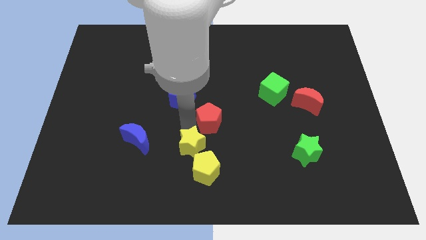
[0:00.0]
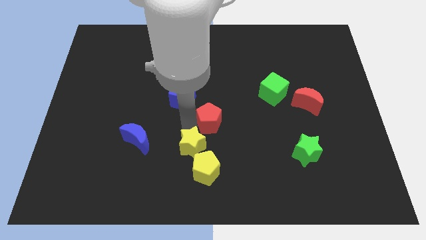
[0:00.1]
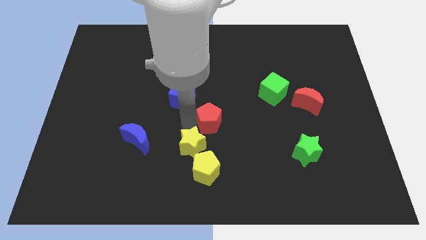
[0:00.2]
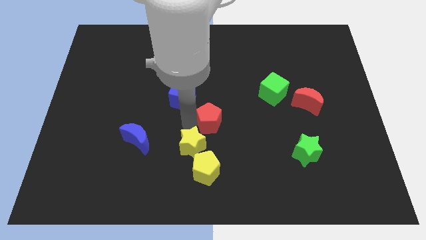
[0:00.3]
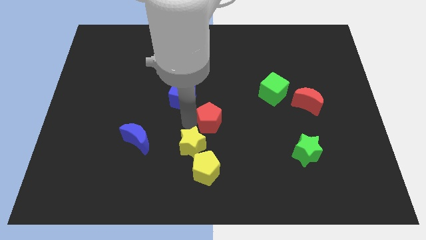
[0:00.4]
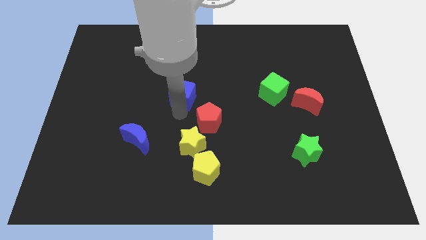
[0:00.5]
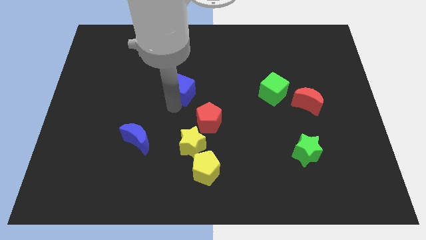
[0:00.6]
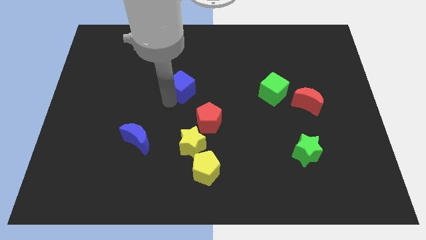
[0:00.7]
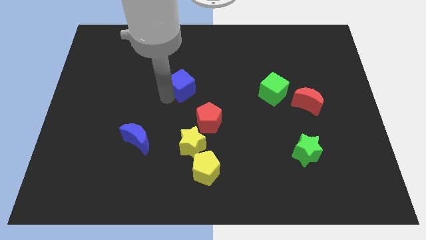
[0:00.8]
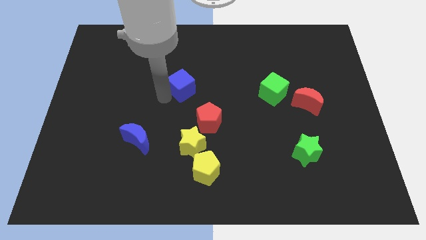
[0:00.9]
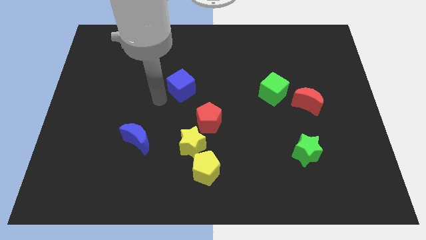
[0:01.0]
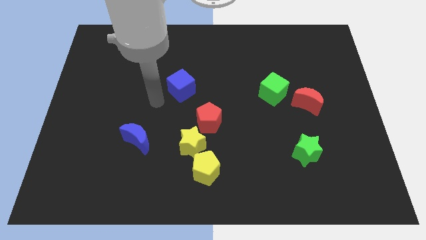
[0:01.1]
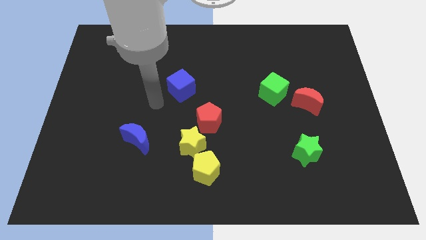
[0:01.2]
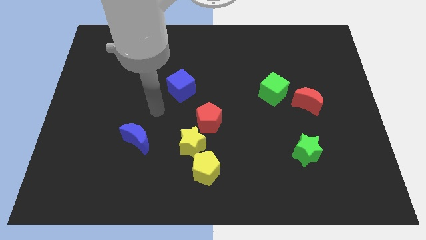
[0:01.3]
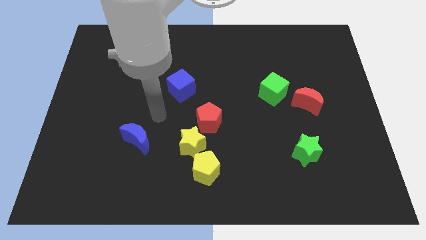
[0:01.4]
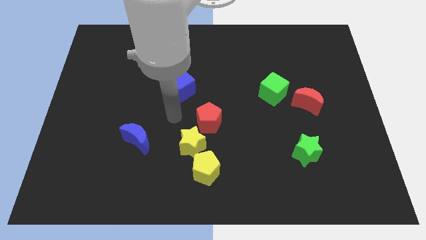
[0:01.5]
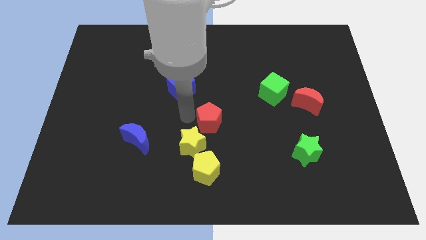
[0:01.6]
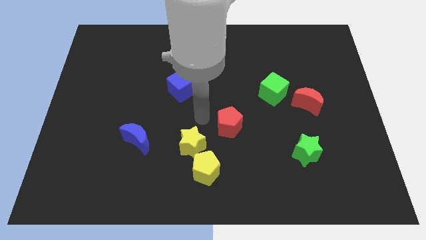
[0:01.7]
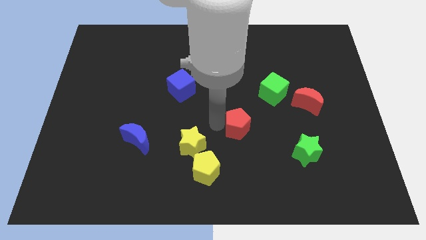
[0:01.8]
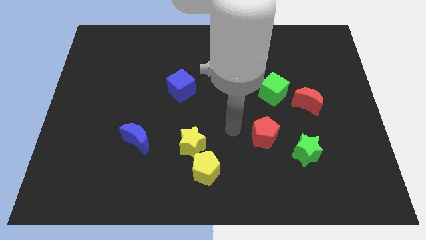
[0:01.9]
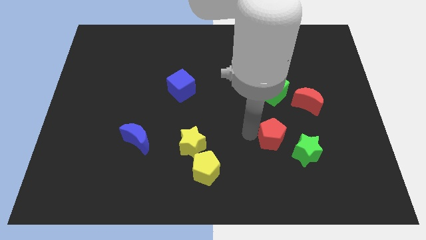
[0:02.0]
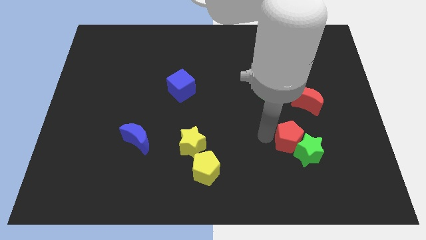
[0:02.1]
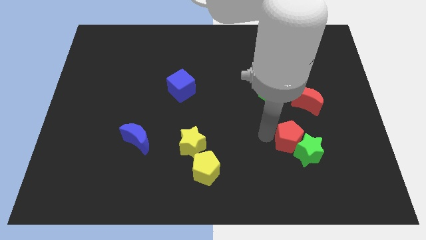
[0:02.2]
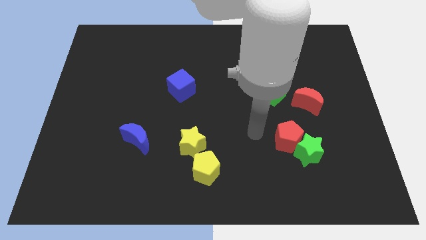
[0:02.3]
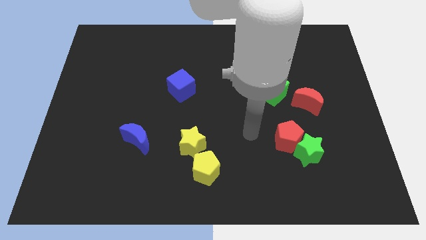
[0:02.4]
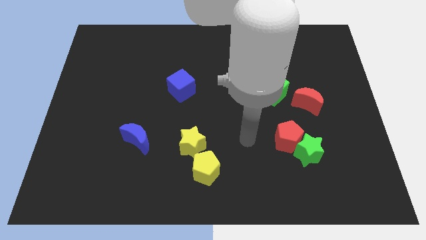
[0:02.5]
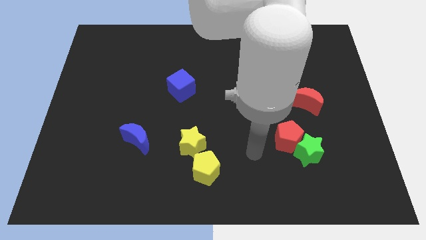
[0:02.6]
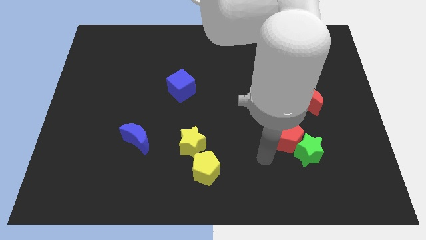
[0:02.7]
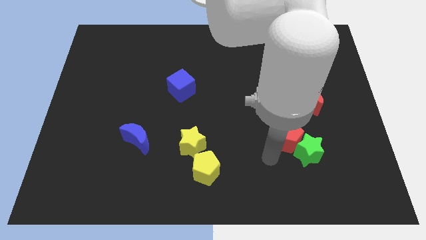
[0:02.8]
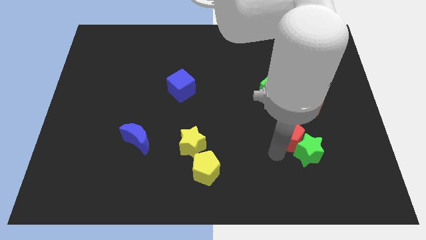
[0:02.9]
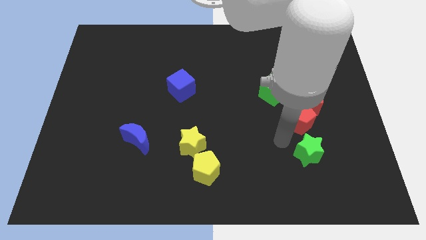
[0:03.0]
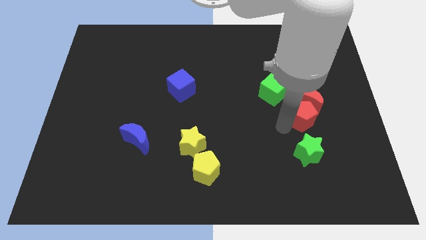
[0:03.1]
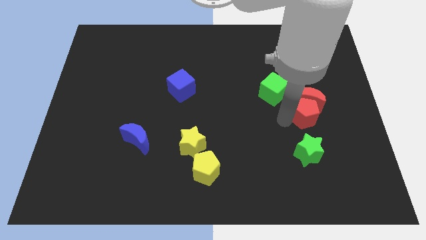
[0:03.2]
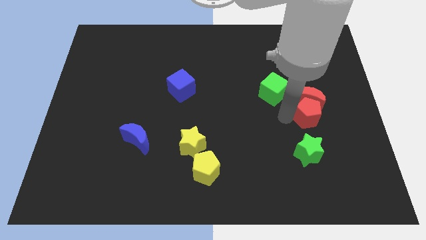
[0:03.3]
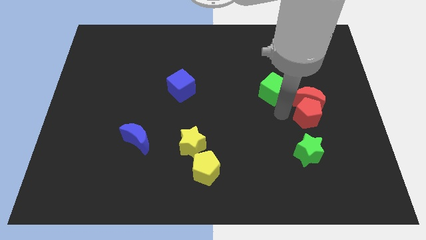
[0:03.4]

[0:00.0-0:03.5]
push the red pentagon into the red crescent

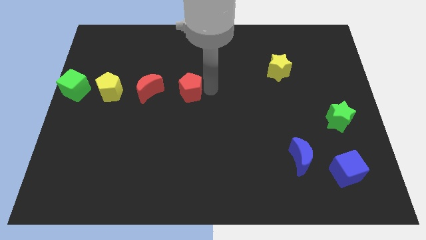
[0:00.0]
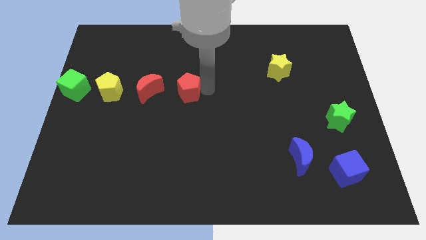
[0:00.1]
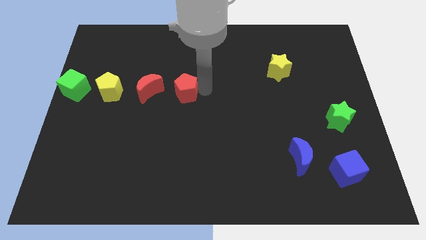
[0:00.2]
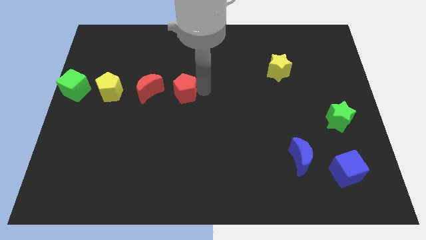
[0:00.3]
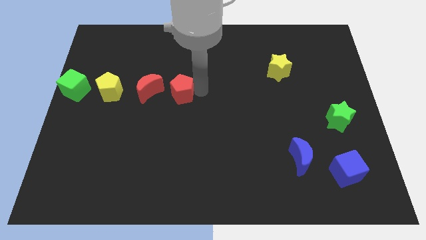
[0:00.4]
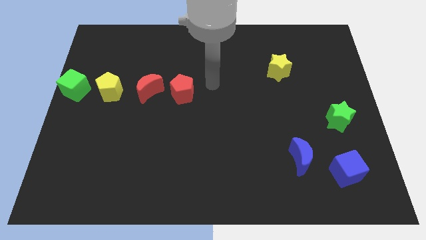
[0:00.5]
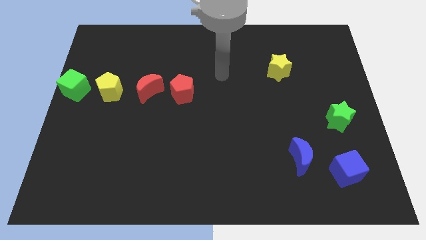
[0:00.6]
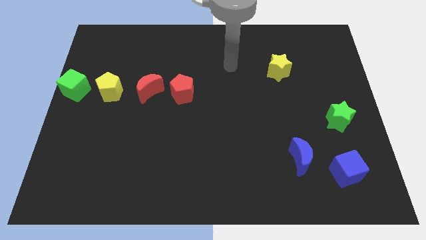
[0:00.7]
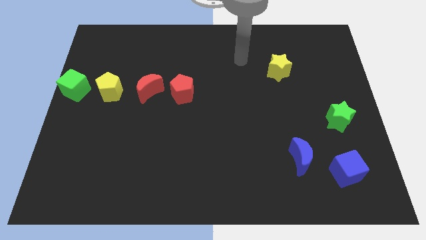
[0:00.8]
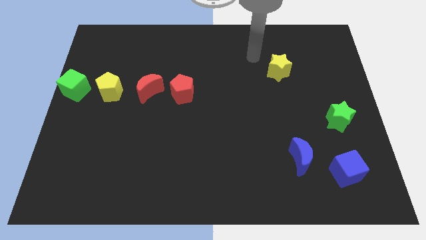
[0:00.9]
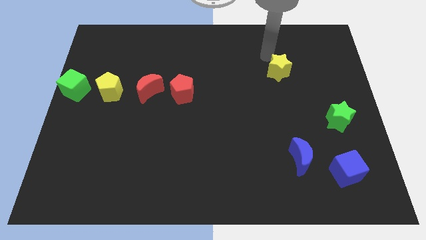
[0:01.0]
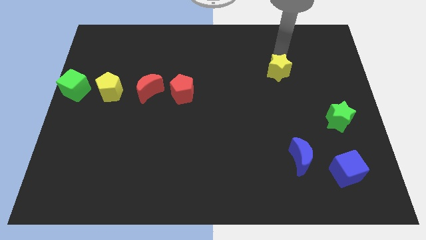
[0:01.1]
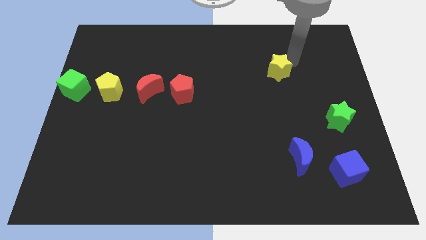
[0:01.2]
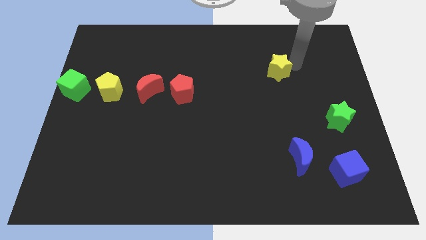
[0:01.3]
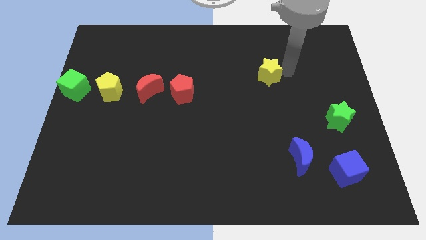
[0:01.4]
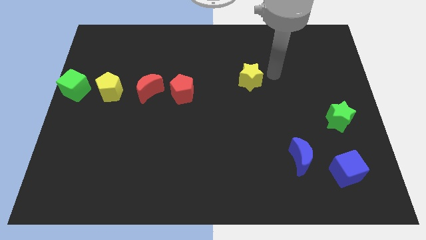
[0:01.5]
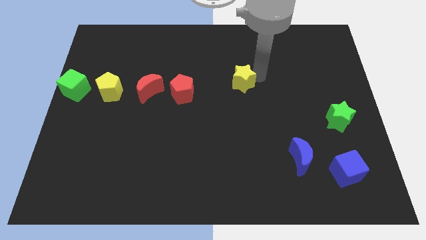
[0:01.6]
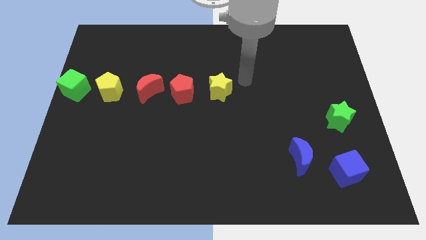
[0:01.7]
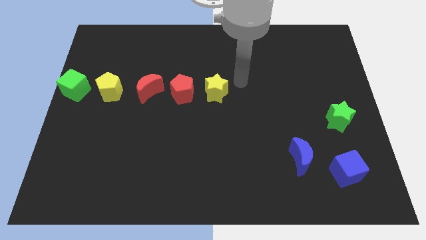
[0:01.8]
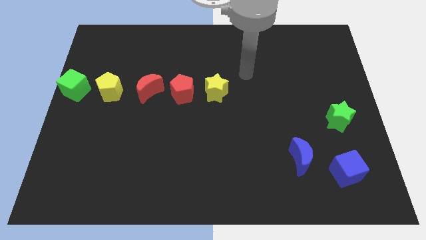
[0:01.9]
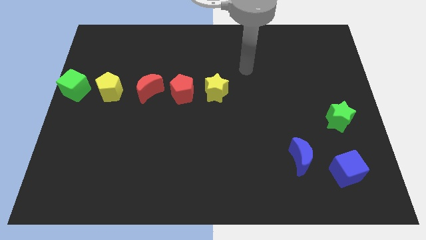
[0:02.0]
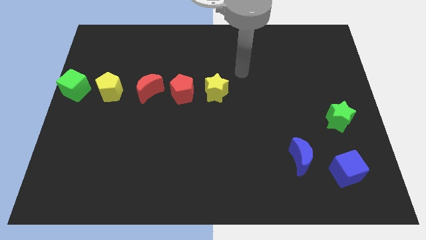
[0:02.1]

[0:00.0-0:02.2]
place the yellow star diagonally at the top left of the green star

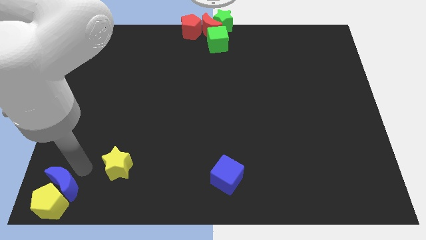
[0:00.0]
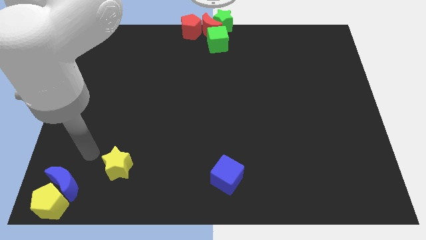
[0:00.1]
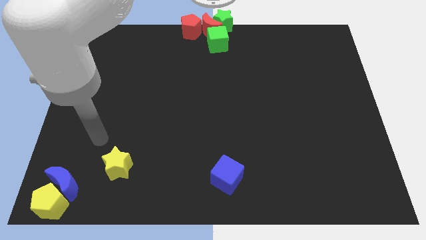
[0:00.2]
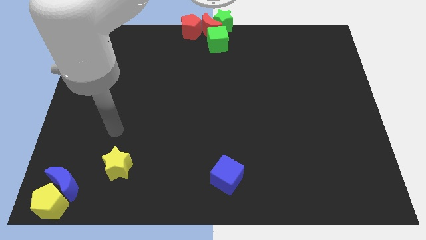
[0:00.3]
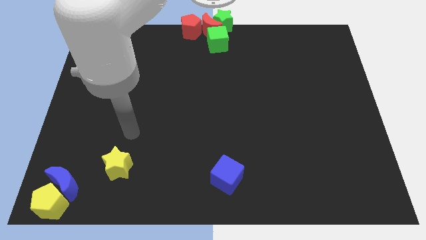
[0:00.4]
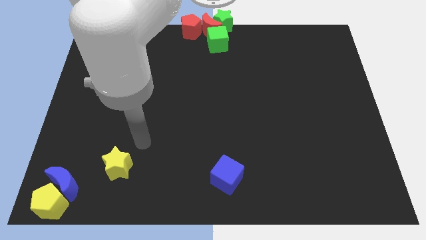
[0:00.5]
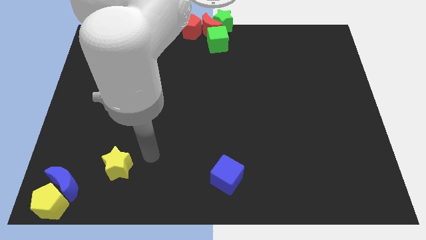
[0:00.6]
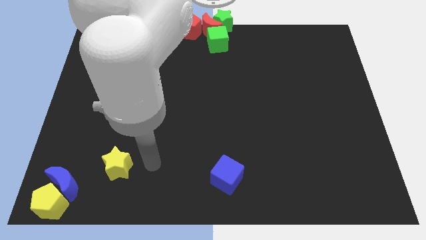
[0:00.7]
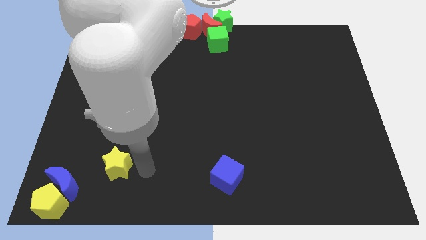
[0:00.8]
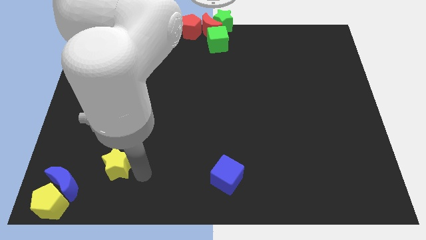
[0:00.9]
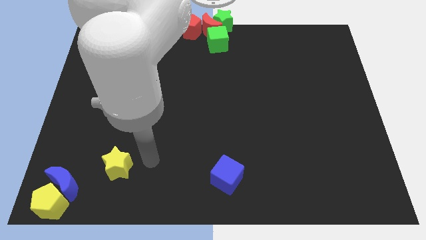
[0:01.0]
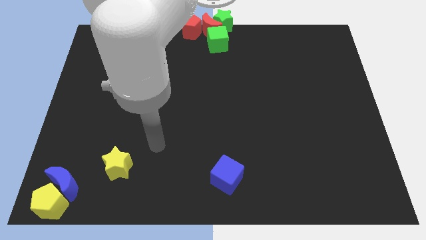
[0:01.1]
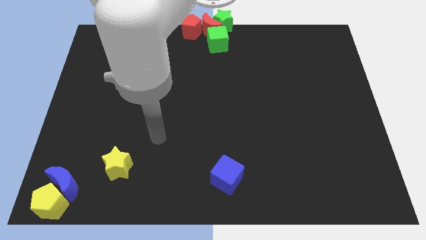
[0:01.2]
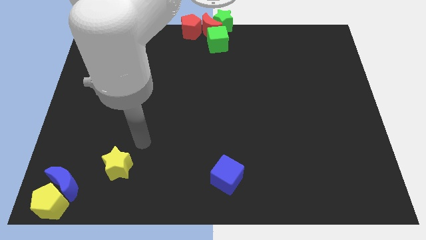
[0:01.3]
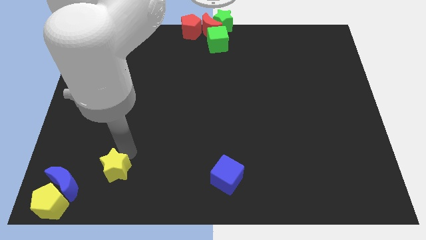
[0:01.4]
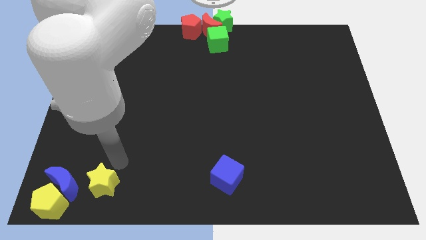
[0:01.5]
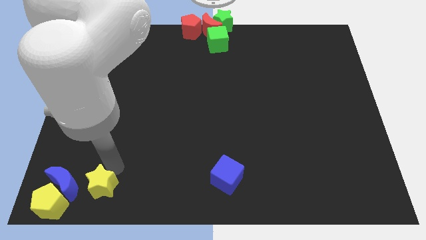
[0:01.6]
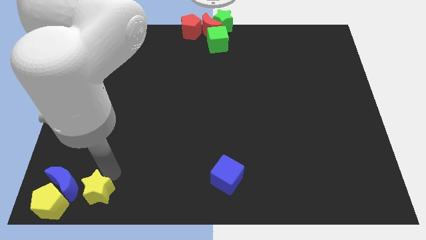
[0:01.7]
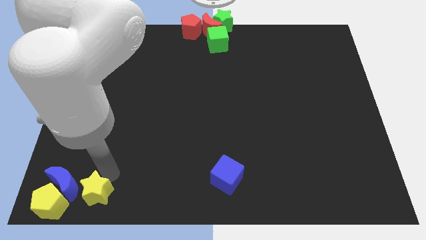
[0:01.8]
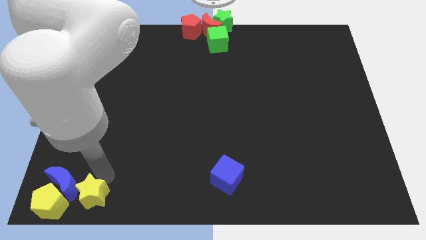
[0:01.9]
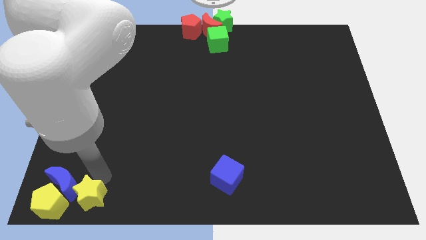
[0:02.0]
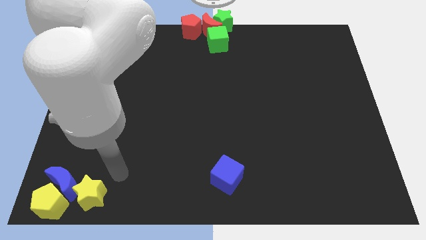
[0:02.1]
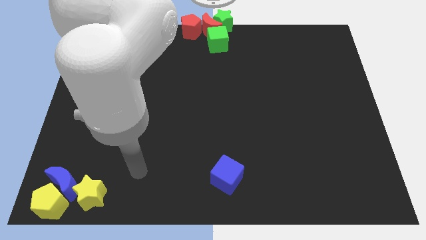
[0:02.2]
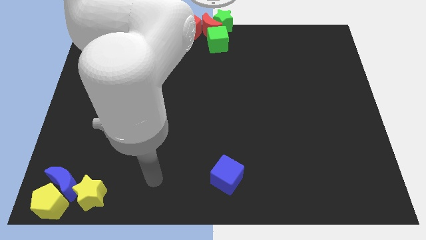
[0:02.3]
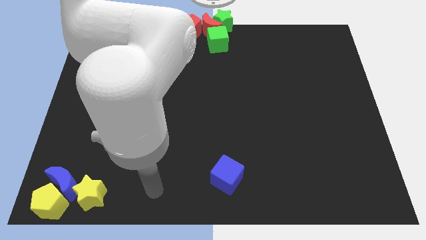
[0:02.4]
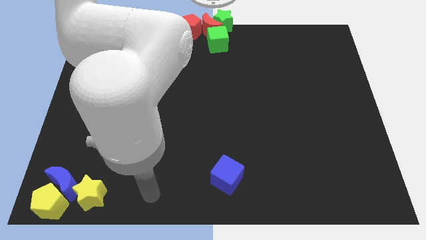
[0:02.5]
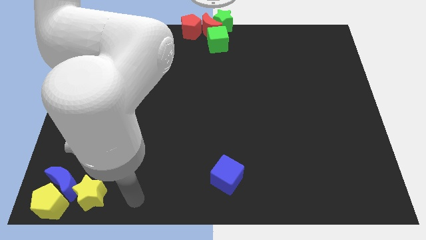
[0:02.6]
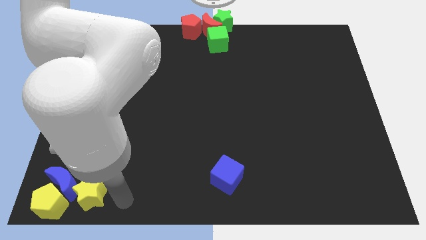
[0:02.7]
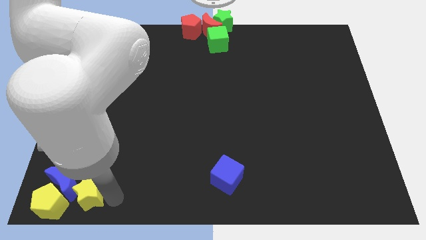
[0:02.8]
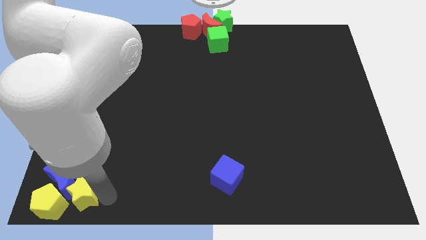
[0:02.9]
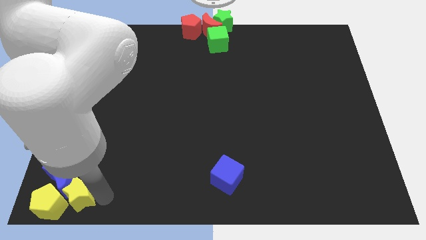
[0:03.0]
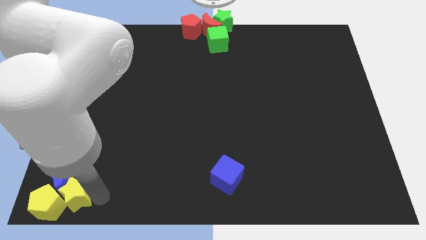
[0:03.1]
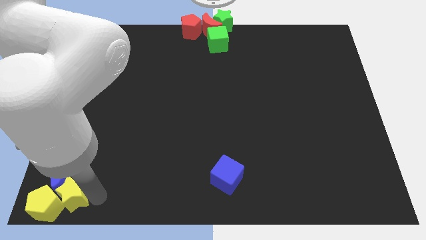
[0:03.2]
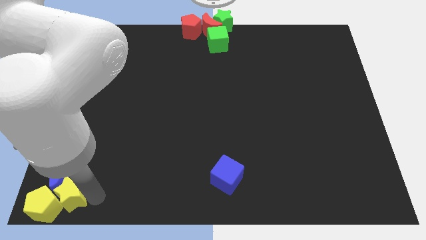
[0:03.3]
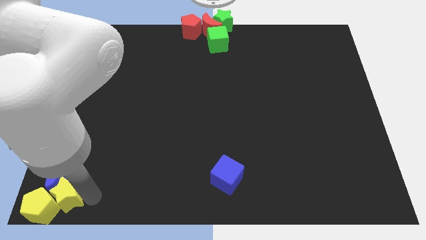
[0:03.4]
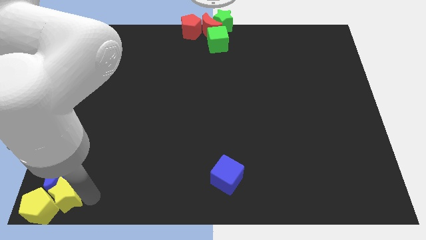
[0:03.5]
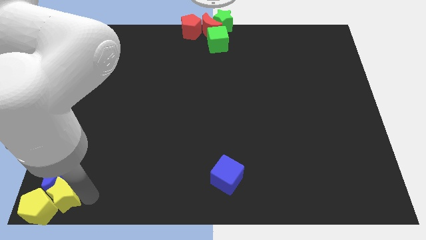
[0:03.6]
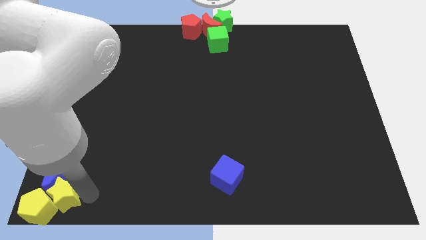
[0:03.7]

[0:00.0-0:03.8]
push the yellow star towards the yellow pentagon
